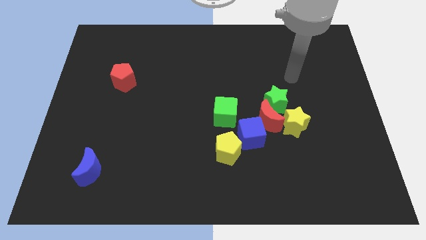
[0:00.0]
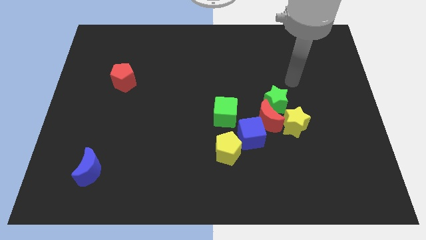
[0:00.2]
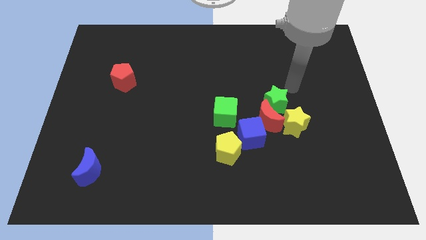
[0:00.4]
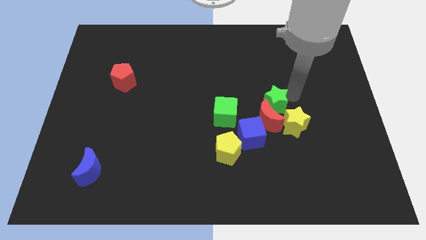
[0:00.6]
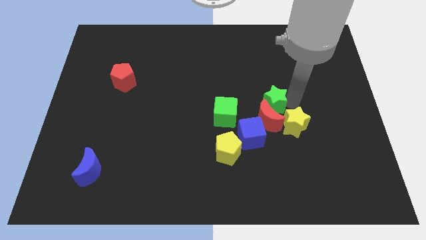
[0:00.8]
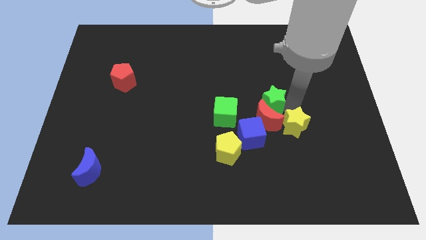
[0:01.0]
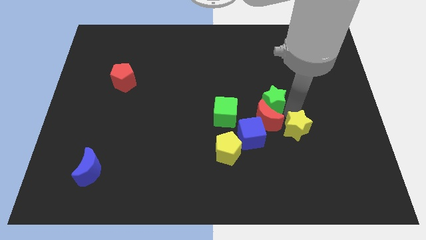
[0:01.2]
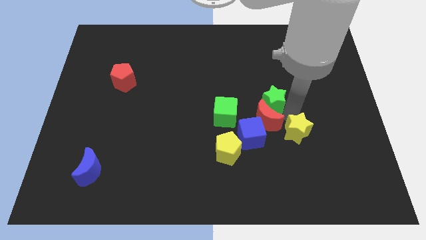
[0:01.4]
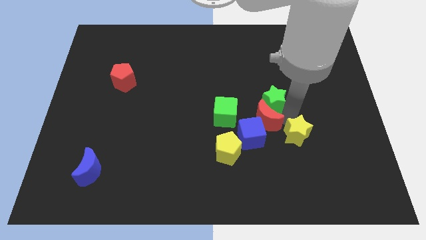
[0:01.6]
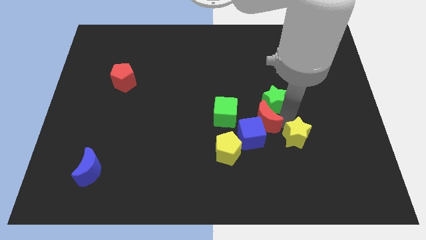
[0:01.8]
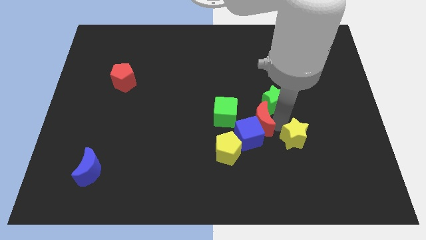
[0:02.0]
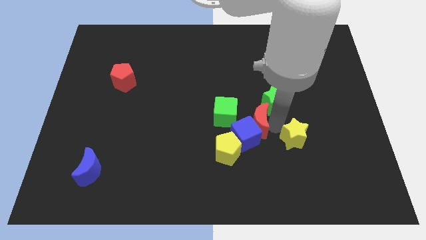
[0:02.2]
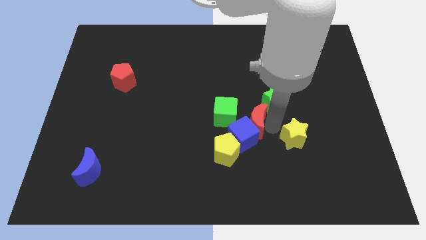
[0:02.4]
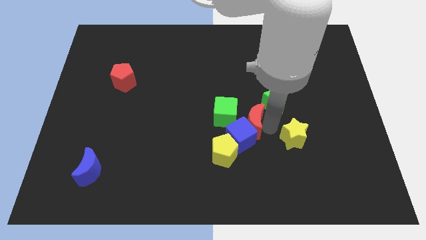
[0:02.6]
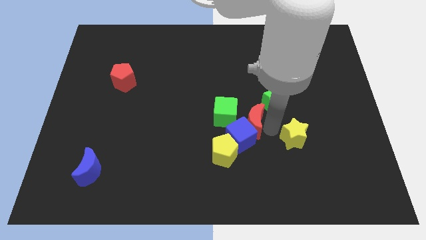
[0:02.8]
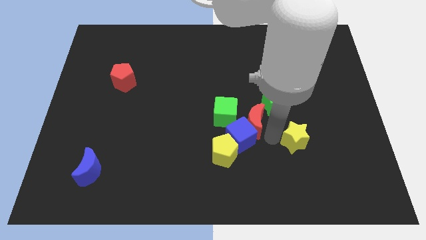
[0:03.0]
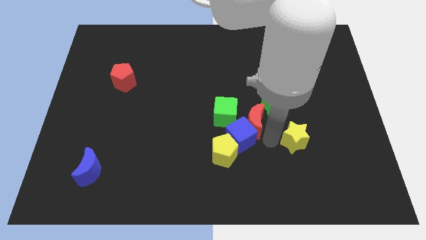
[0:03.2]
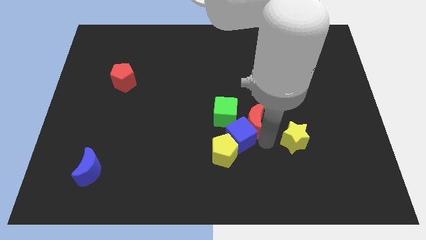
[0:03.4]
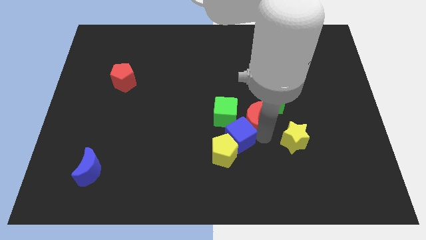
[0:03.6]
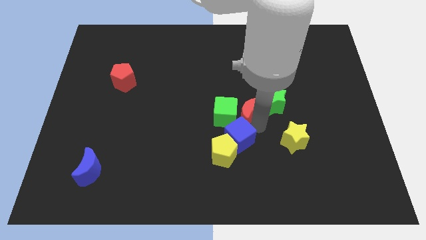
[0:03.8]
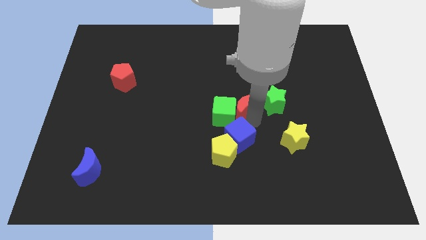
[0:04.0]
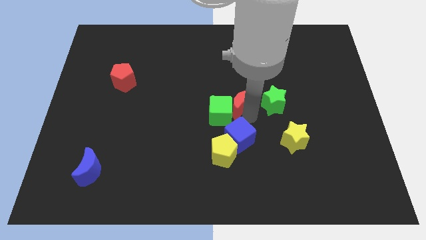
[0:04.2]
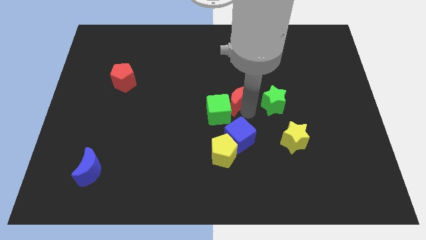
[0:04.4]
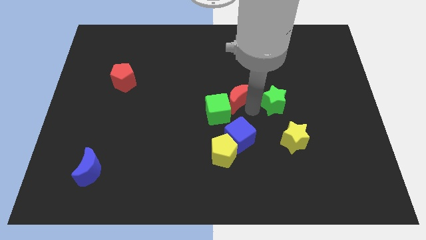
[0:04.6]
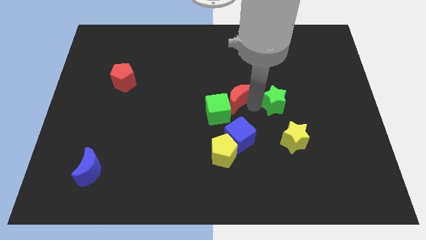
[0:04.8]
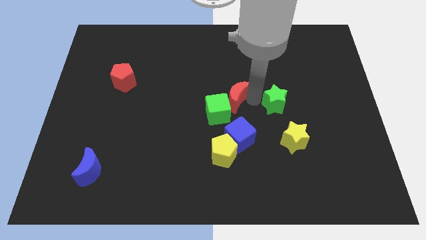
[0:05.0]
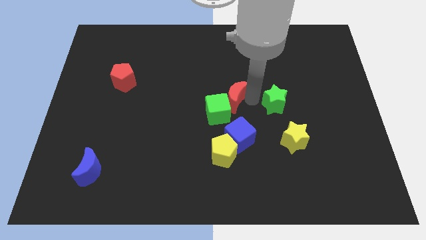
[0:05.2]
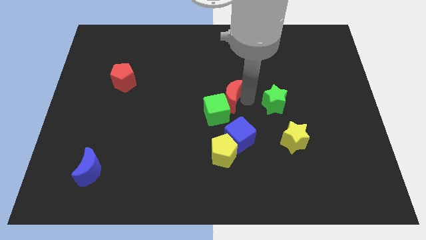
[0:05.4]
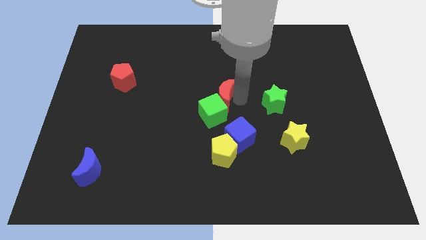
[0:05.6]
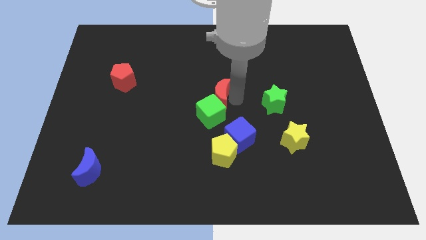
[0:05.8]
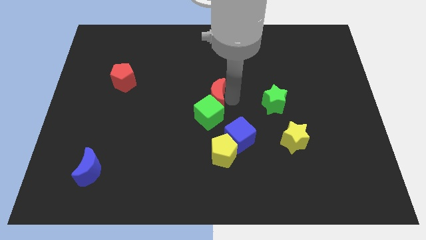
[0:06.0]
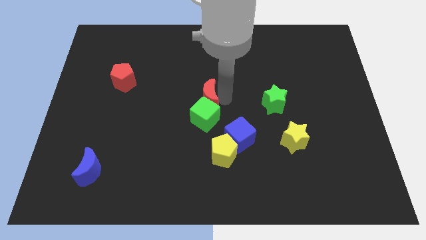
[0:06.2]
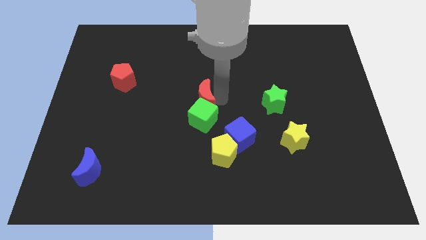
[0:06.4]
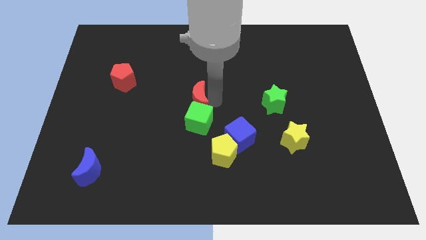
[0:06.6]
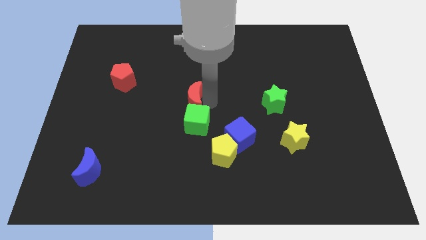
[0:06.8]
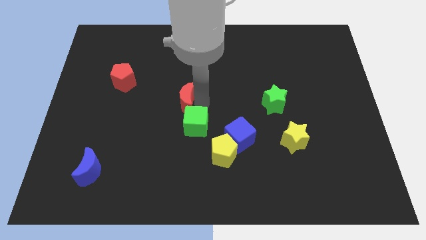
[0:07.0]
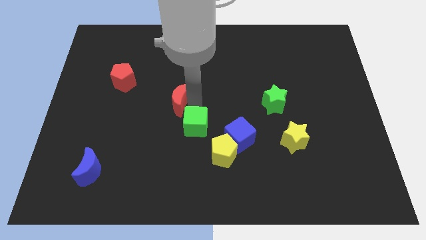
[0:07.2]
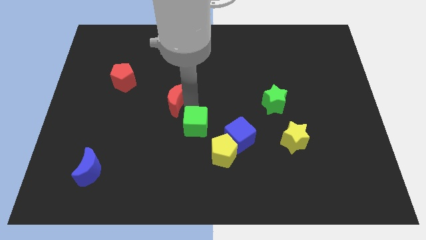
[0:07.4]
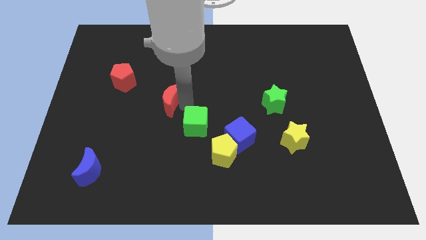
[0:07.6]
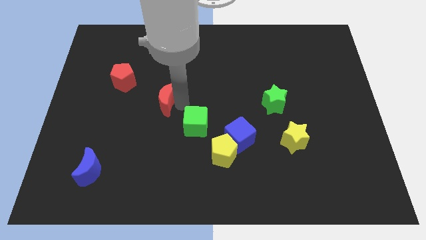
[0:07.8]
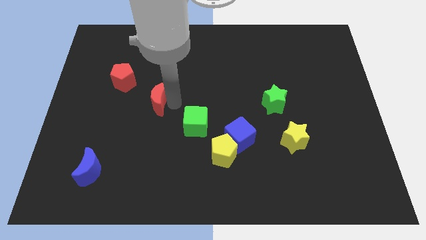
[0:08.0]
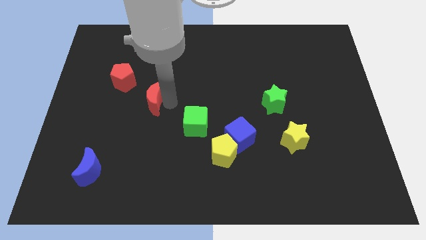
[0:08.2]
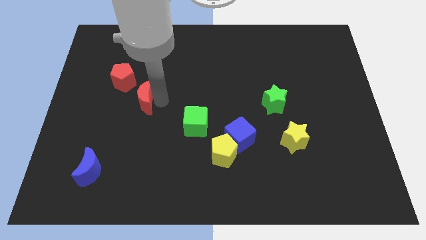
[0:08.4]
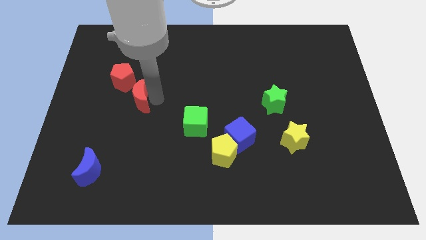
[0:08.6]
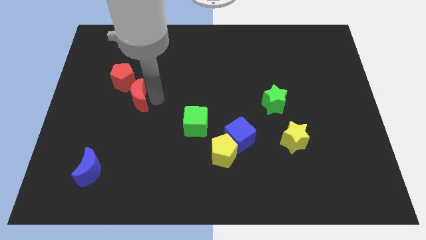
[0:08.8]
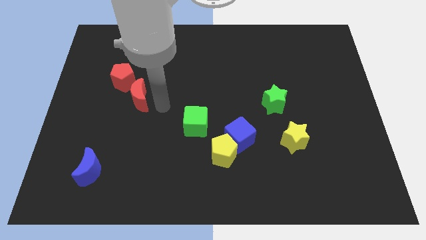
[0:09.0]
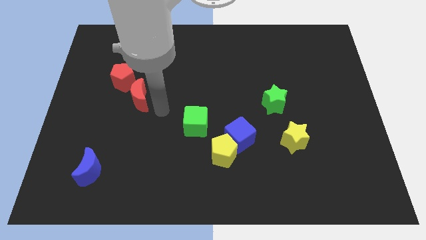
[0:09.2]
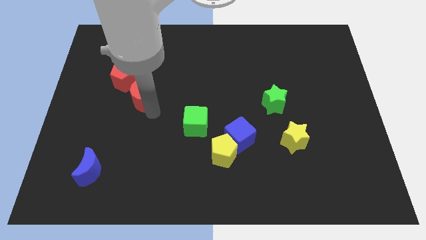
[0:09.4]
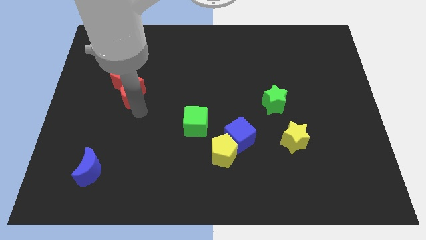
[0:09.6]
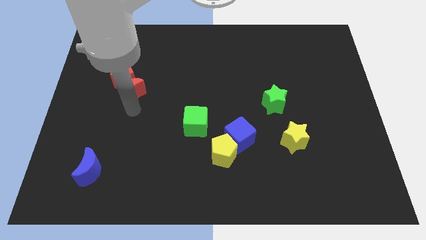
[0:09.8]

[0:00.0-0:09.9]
move the red moon close to the red pentagon

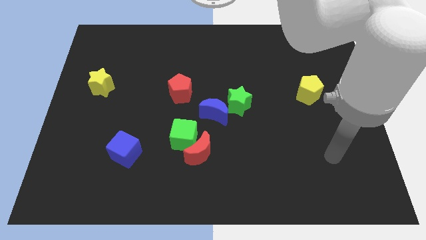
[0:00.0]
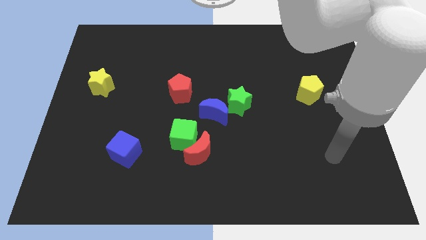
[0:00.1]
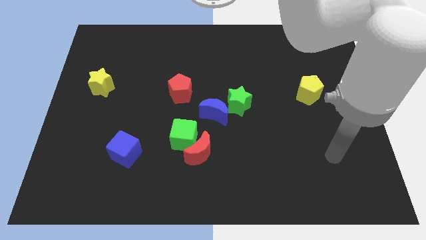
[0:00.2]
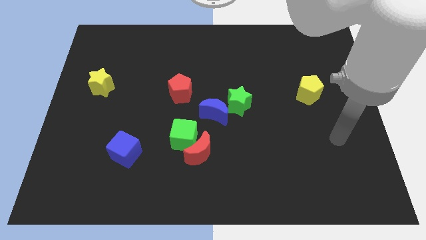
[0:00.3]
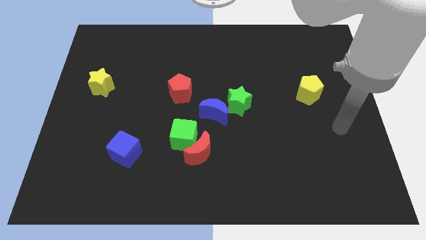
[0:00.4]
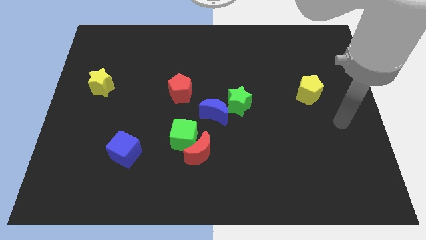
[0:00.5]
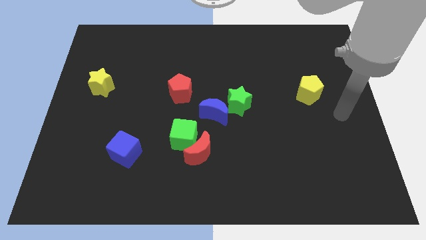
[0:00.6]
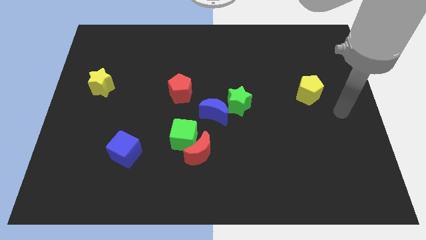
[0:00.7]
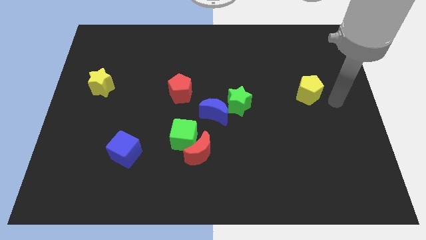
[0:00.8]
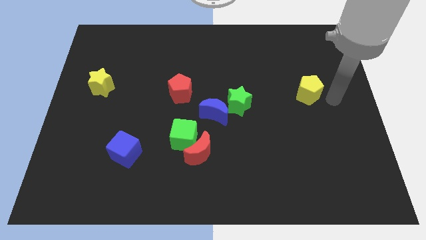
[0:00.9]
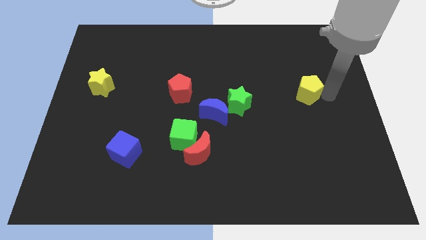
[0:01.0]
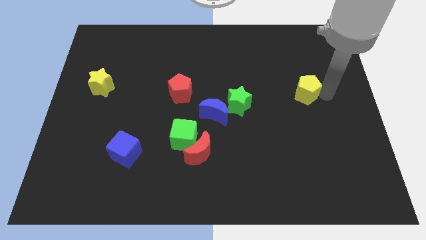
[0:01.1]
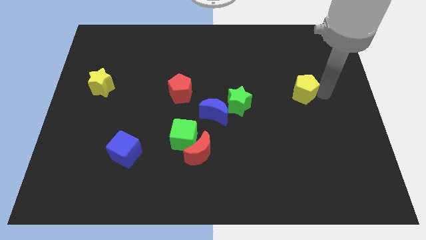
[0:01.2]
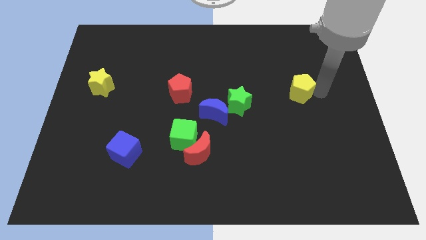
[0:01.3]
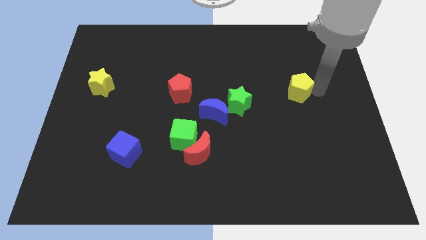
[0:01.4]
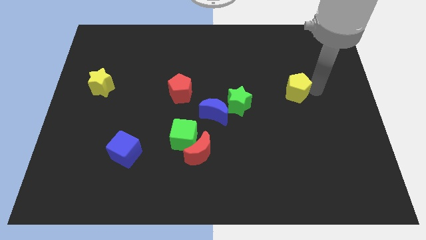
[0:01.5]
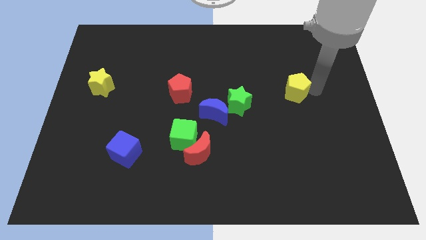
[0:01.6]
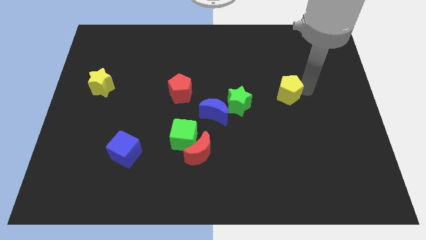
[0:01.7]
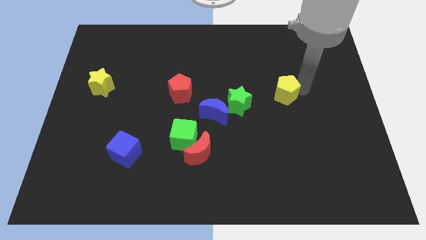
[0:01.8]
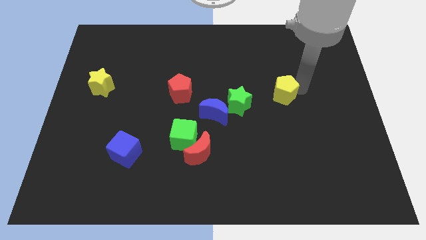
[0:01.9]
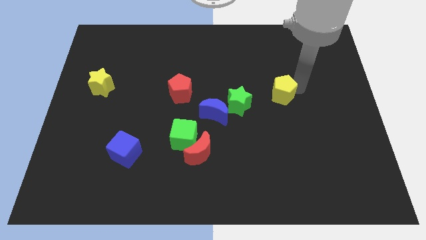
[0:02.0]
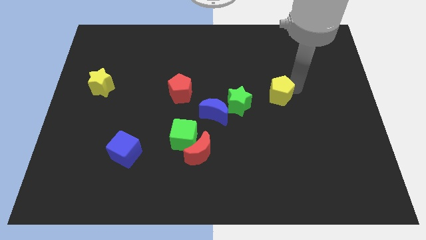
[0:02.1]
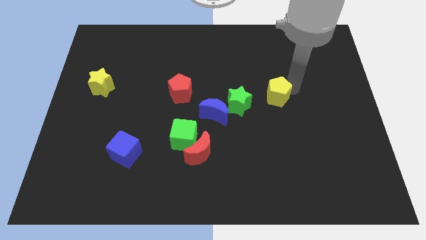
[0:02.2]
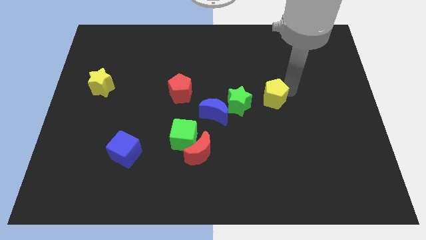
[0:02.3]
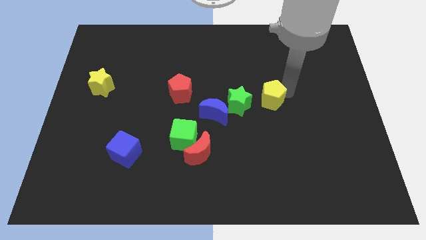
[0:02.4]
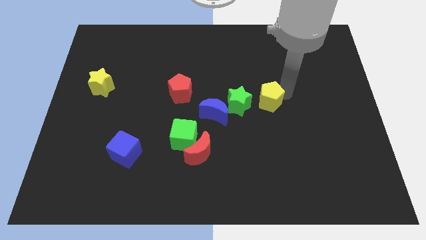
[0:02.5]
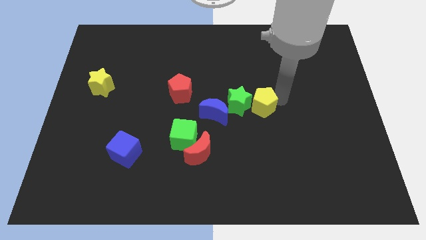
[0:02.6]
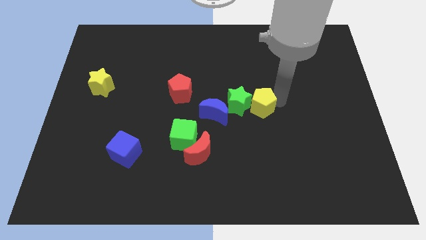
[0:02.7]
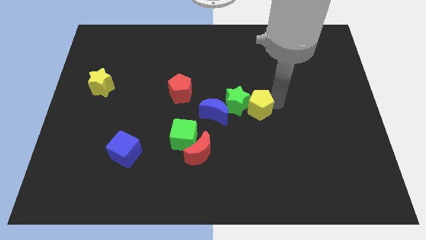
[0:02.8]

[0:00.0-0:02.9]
slide the yellow pentagon to the green star

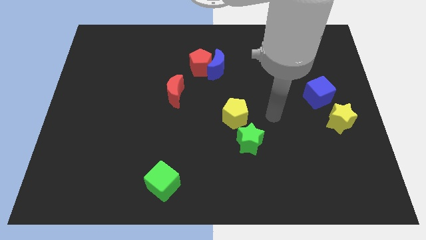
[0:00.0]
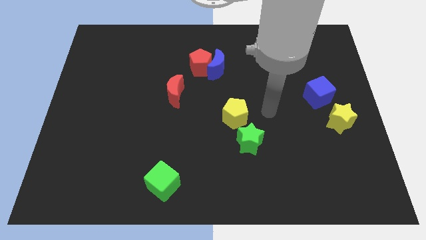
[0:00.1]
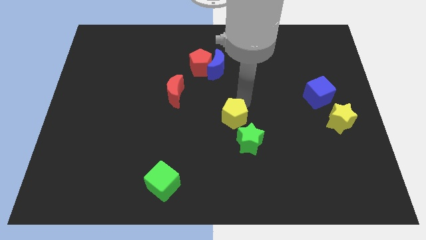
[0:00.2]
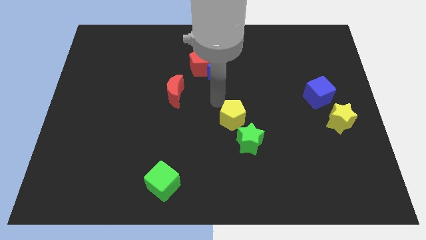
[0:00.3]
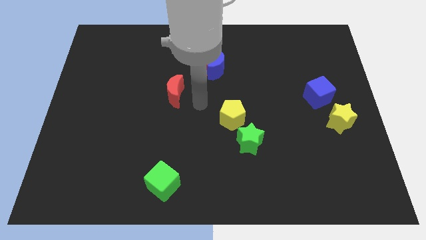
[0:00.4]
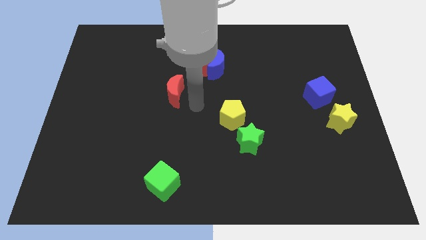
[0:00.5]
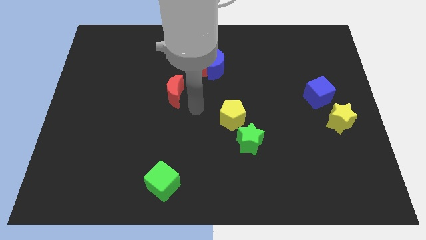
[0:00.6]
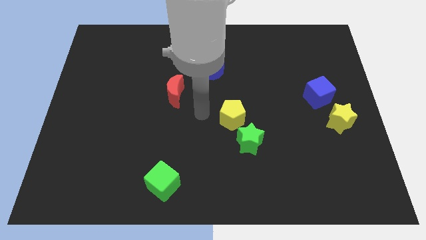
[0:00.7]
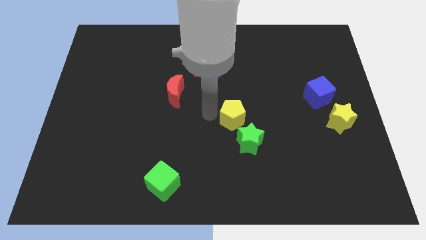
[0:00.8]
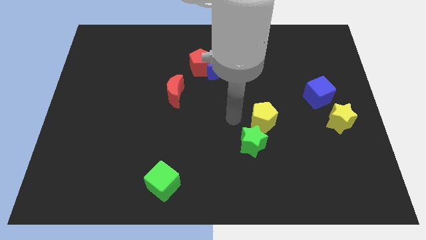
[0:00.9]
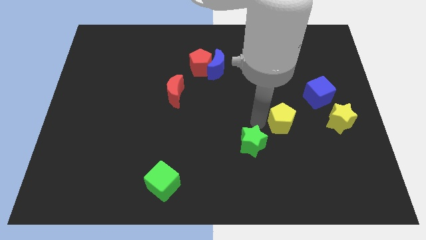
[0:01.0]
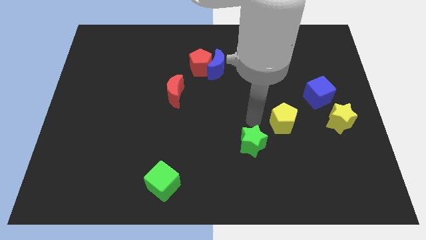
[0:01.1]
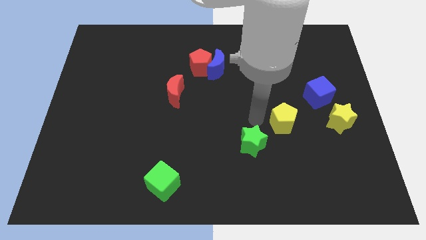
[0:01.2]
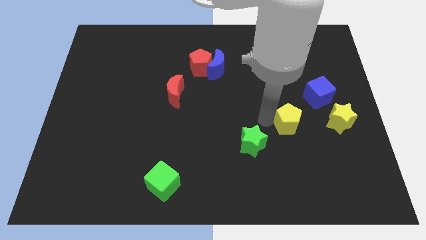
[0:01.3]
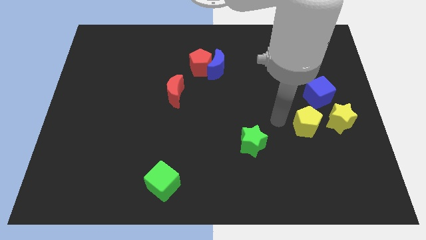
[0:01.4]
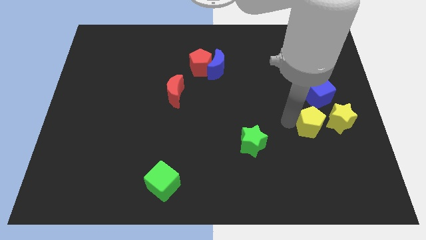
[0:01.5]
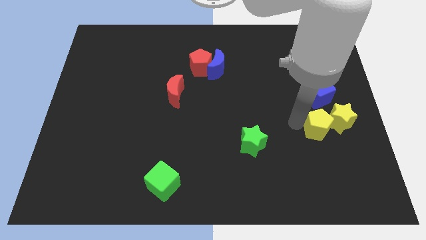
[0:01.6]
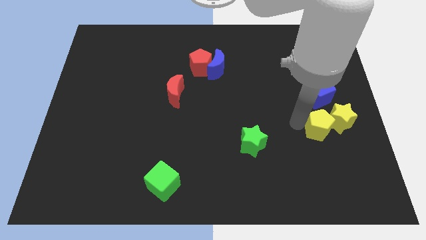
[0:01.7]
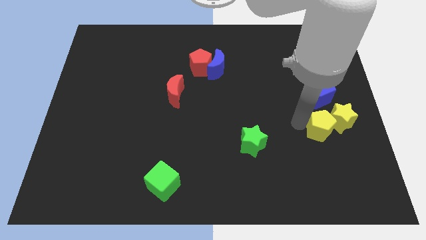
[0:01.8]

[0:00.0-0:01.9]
push the yellow pentagon towards the yellow star
